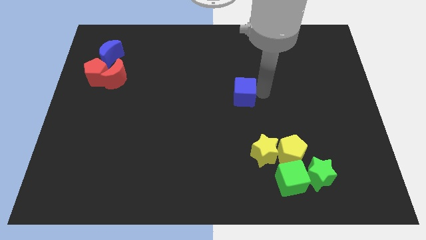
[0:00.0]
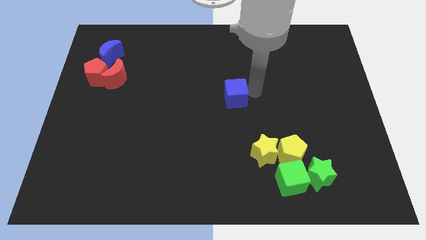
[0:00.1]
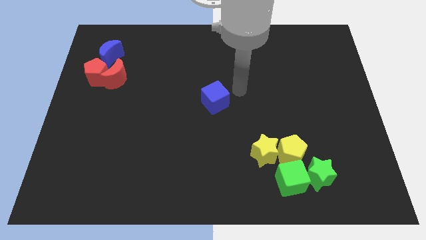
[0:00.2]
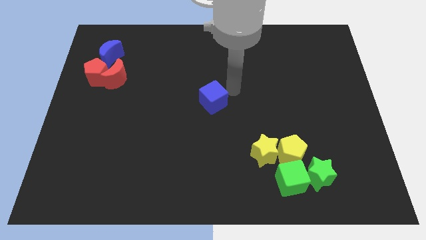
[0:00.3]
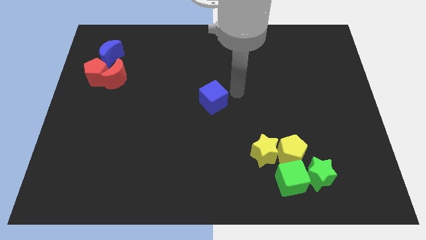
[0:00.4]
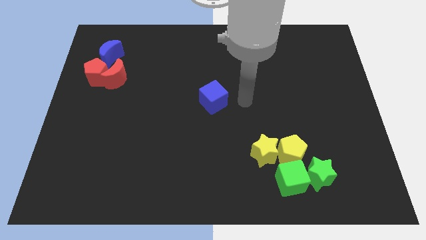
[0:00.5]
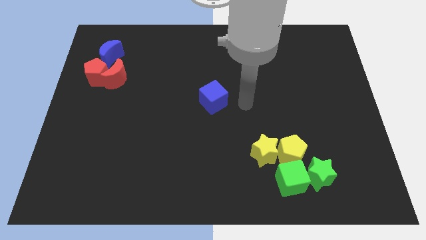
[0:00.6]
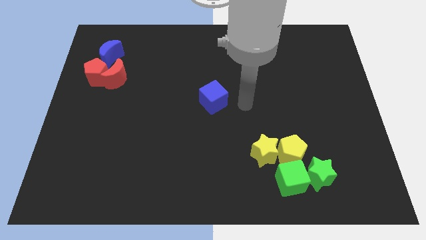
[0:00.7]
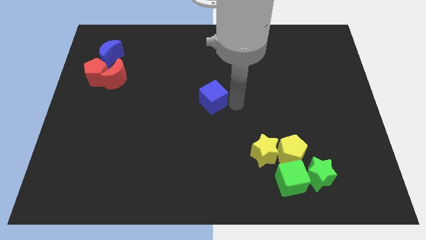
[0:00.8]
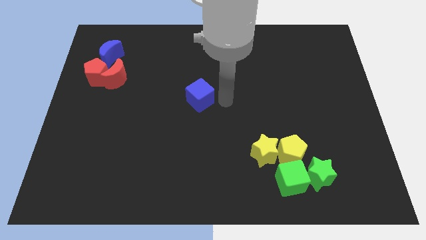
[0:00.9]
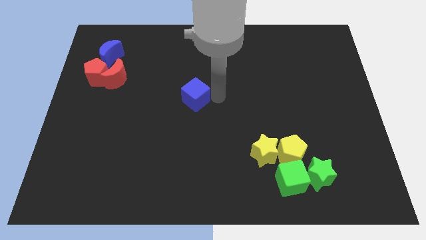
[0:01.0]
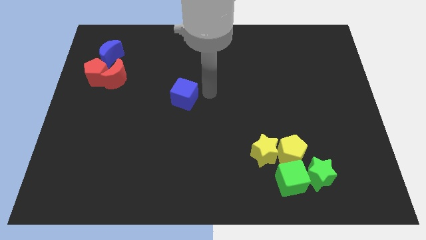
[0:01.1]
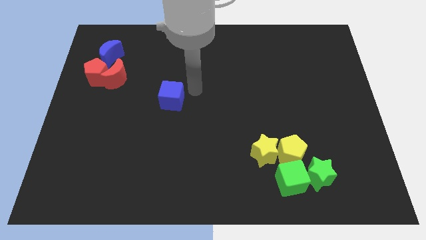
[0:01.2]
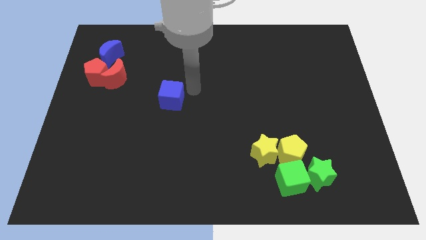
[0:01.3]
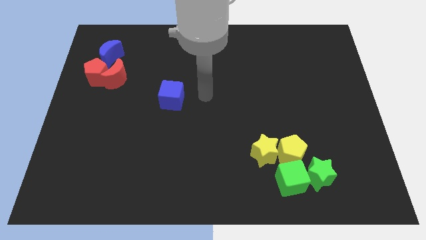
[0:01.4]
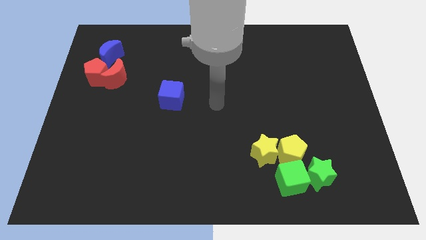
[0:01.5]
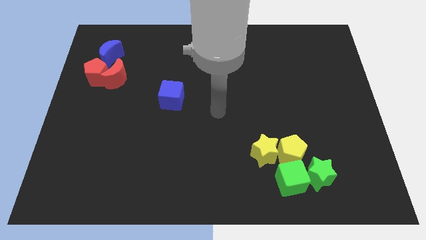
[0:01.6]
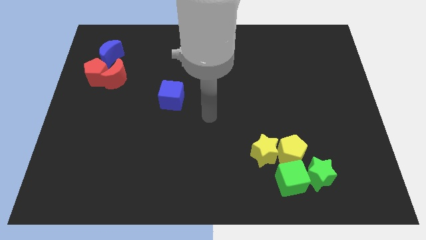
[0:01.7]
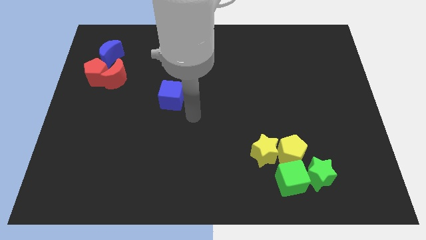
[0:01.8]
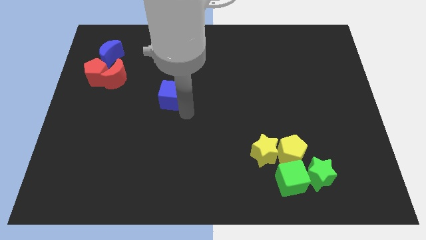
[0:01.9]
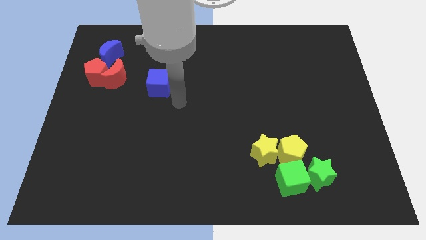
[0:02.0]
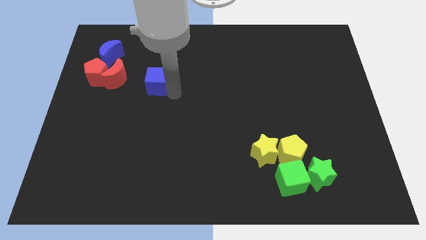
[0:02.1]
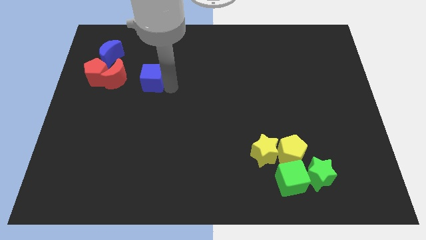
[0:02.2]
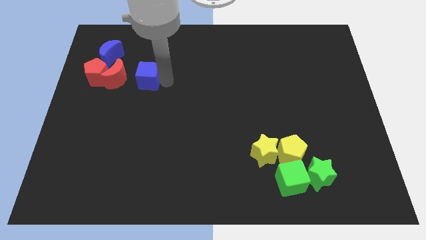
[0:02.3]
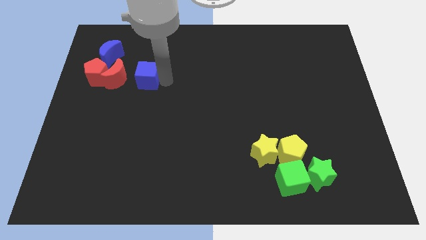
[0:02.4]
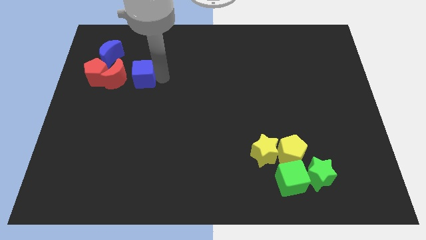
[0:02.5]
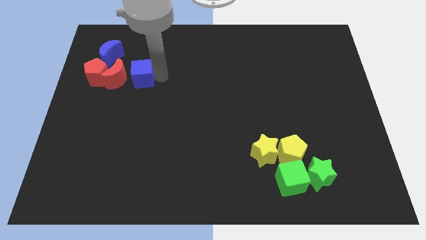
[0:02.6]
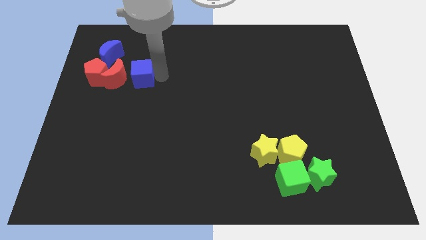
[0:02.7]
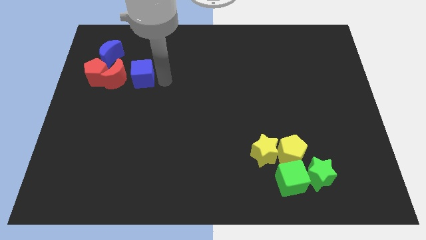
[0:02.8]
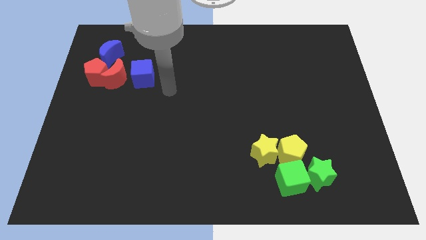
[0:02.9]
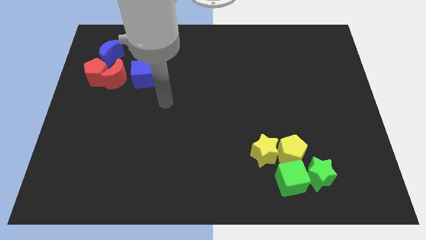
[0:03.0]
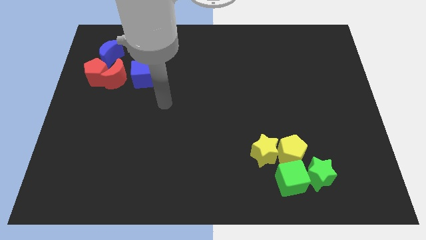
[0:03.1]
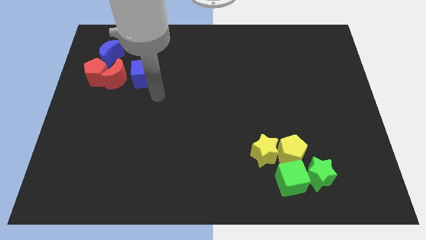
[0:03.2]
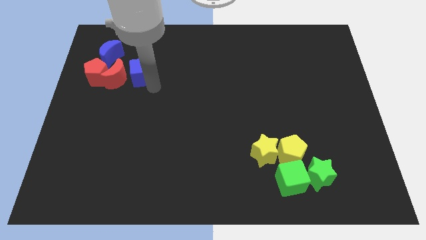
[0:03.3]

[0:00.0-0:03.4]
place the blue cube to the right of the red moon

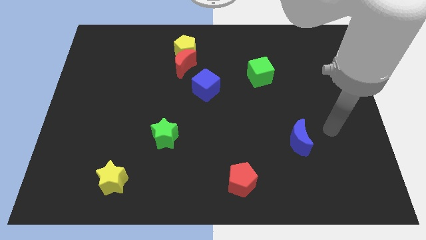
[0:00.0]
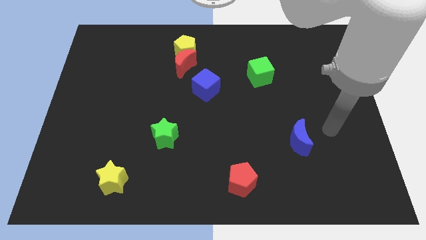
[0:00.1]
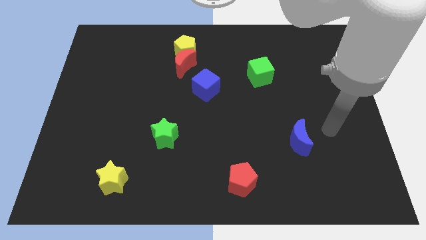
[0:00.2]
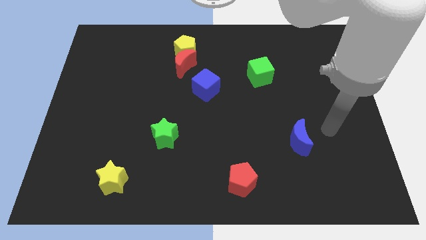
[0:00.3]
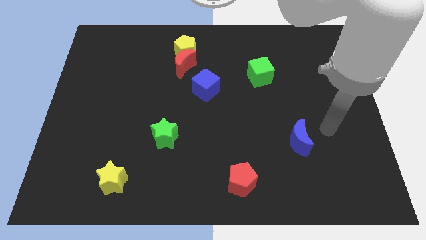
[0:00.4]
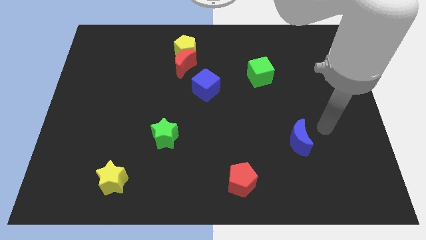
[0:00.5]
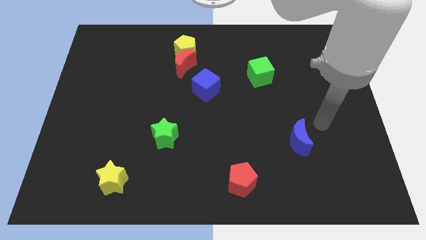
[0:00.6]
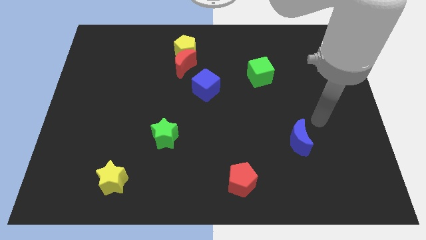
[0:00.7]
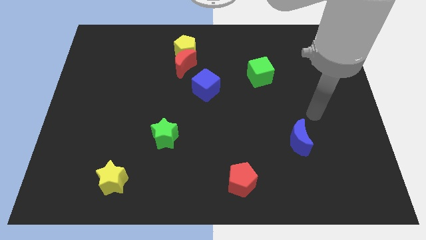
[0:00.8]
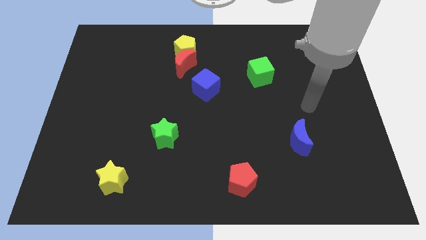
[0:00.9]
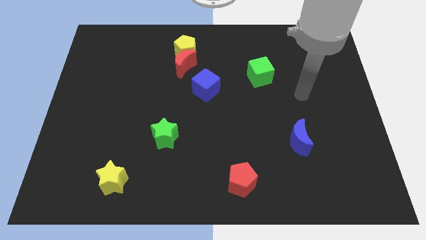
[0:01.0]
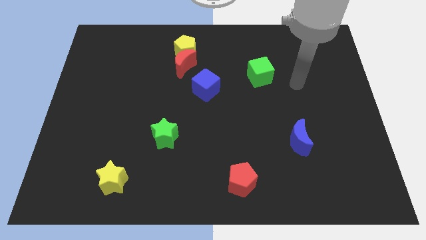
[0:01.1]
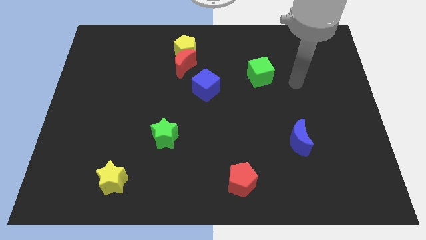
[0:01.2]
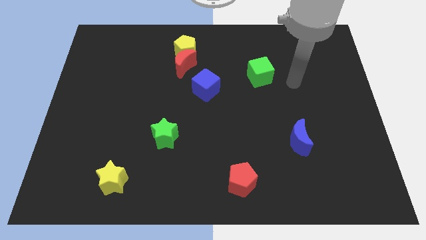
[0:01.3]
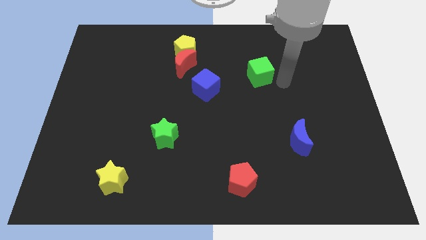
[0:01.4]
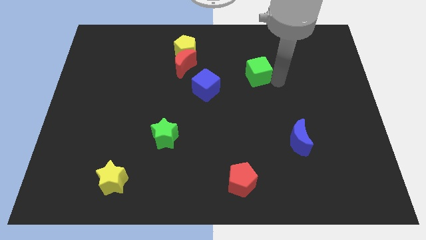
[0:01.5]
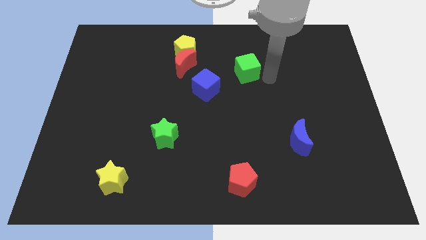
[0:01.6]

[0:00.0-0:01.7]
move your arm to the right side of the green cube

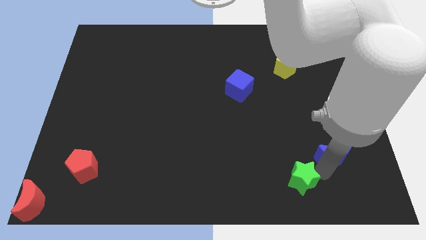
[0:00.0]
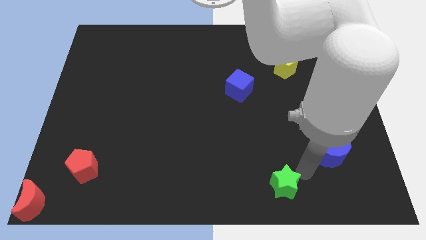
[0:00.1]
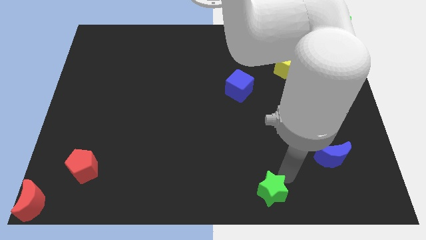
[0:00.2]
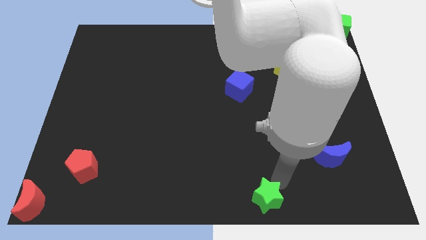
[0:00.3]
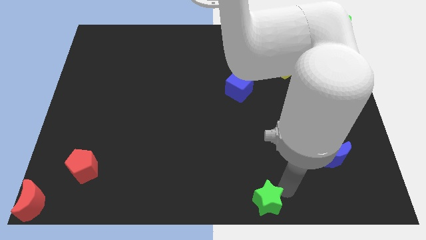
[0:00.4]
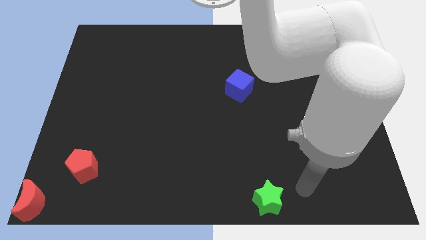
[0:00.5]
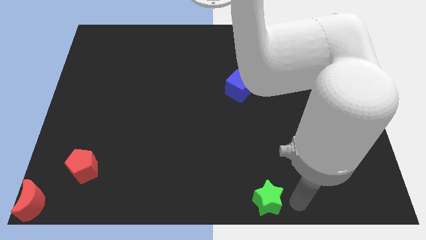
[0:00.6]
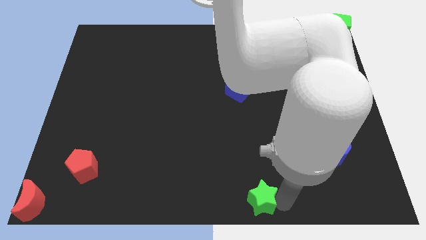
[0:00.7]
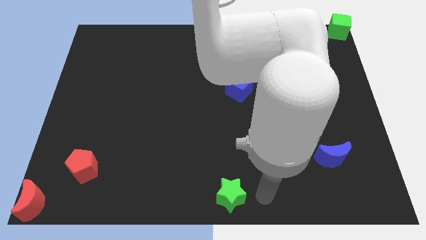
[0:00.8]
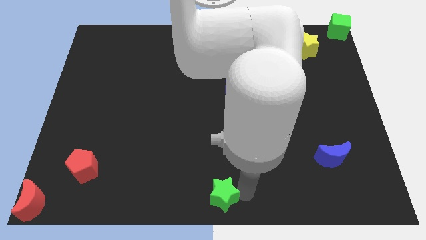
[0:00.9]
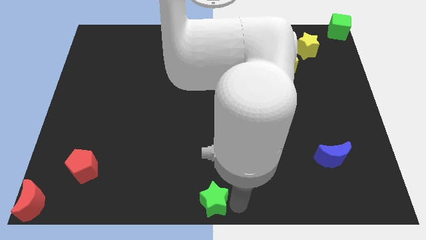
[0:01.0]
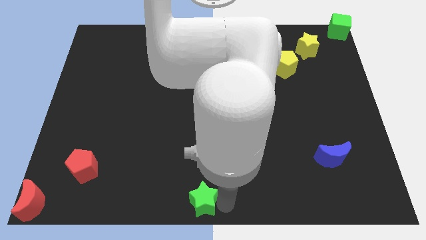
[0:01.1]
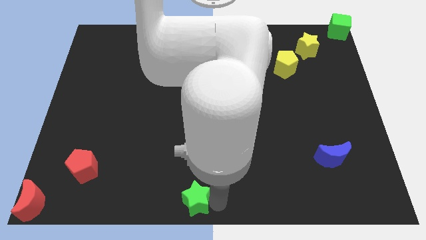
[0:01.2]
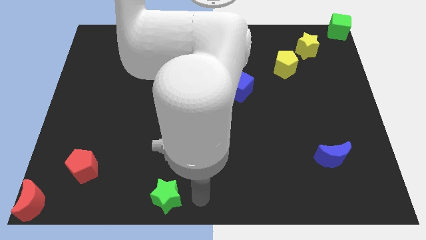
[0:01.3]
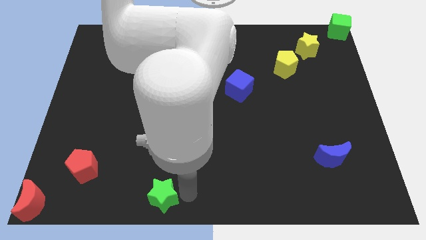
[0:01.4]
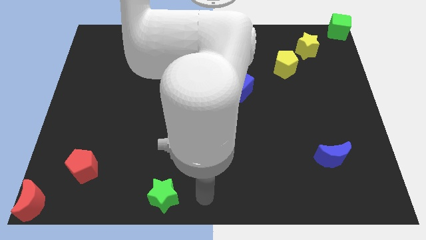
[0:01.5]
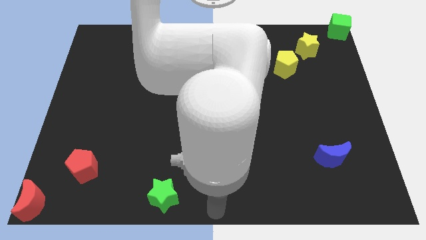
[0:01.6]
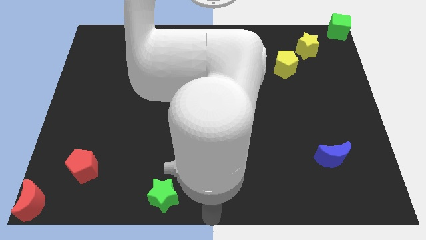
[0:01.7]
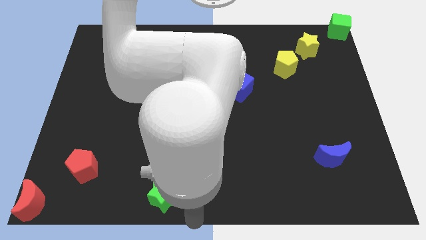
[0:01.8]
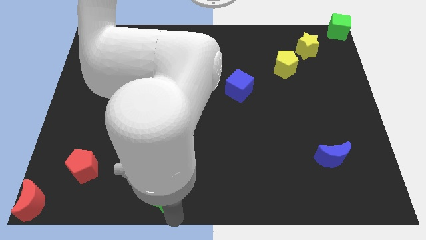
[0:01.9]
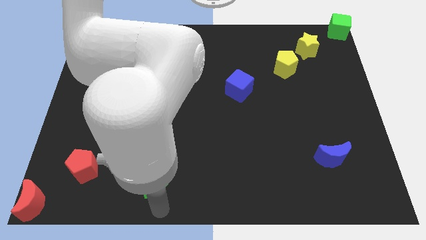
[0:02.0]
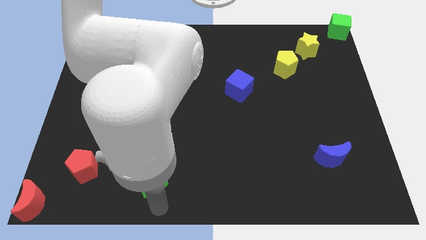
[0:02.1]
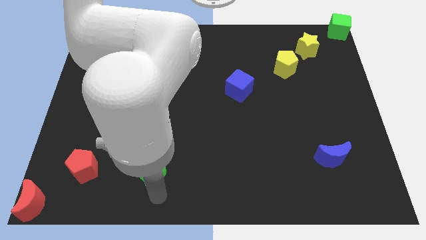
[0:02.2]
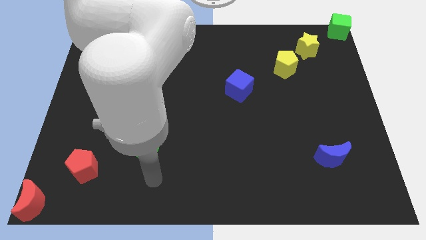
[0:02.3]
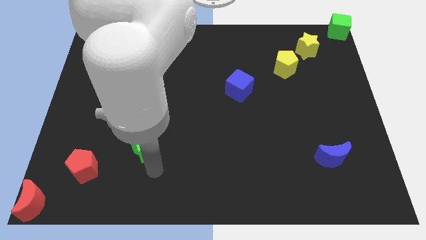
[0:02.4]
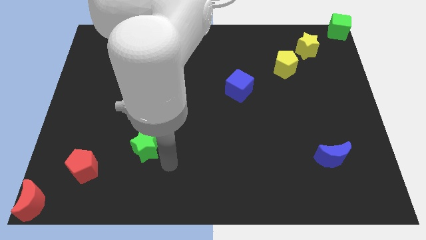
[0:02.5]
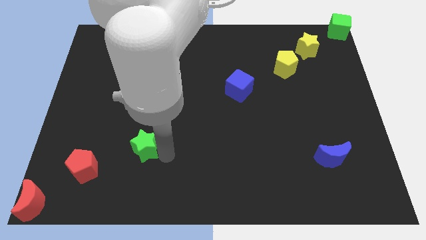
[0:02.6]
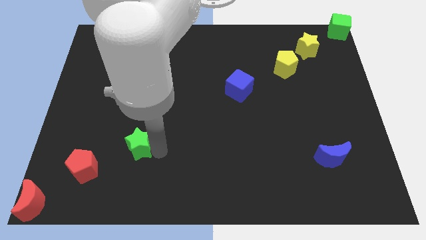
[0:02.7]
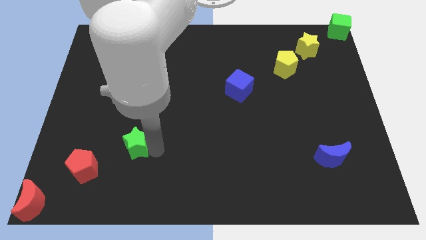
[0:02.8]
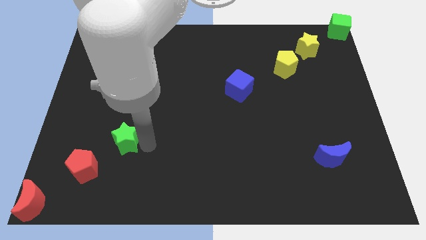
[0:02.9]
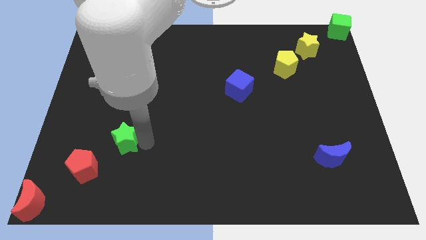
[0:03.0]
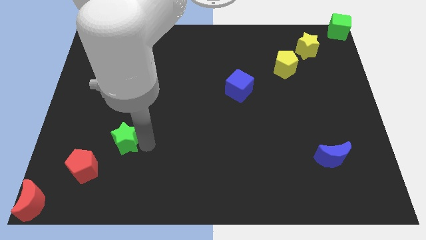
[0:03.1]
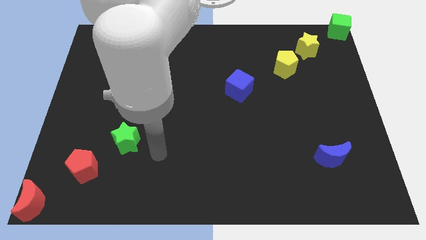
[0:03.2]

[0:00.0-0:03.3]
move the green star to the top right of the red pentagon

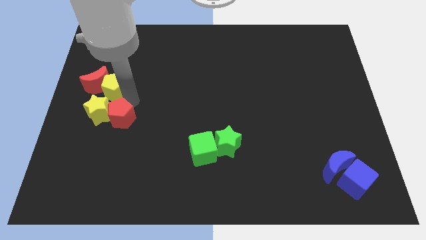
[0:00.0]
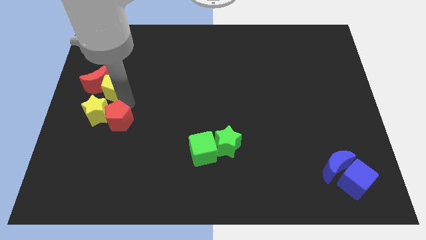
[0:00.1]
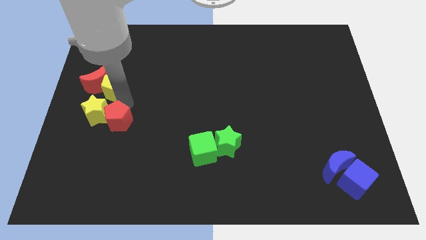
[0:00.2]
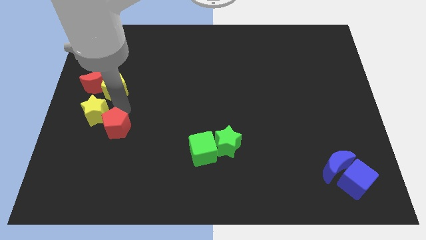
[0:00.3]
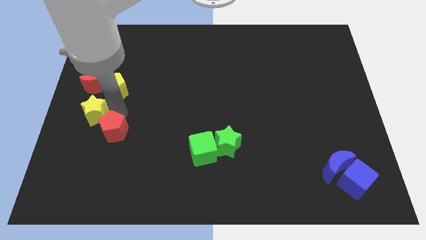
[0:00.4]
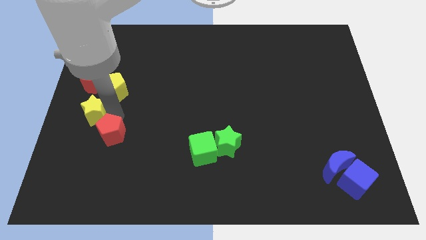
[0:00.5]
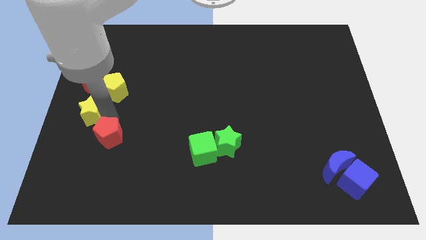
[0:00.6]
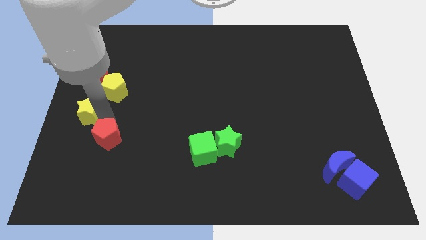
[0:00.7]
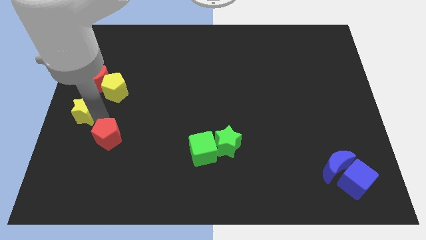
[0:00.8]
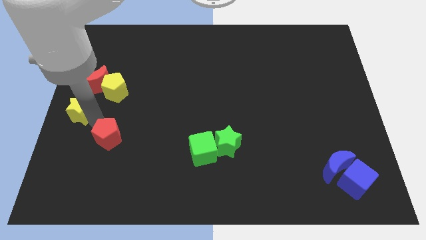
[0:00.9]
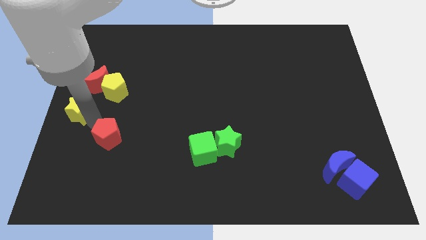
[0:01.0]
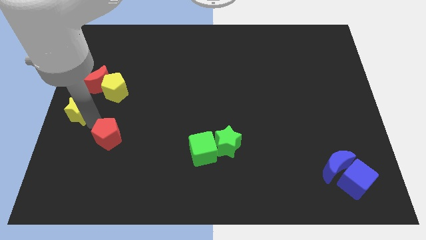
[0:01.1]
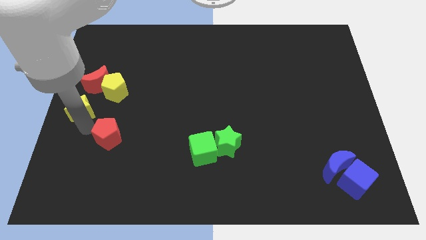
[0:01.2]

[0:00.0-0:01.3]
separate yellow star and the red pentagon
